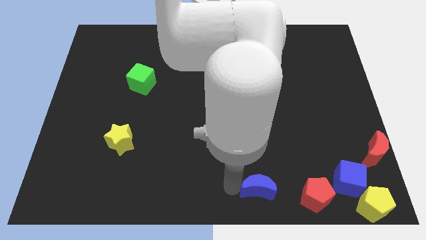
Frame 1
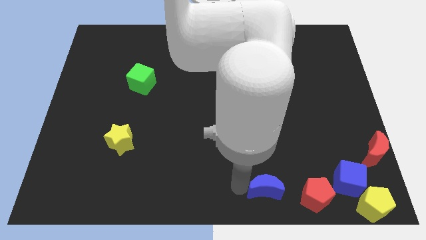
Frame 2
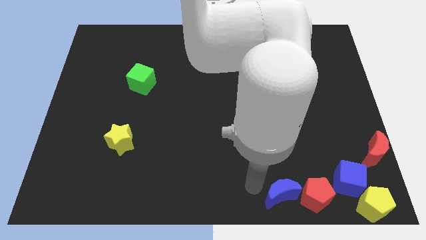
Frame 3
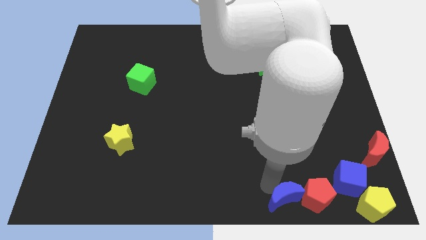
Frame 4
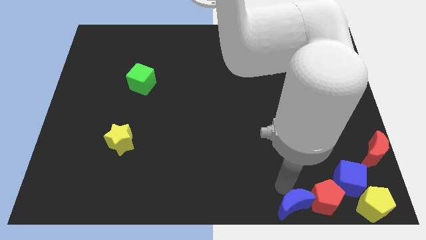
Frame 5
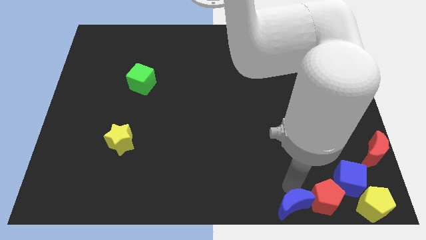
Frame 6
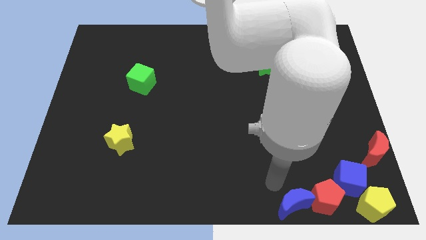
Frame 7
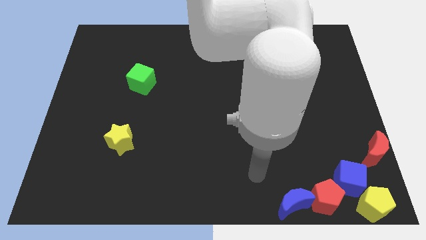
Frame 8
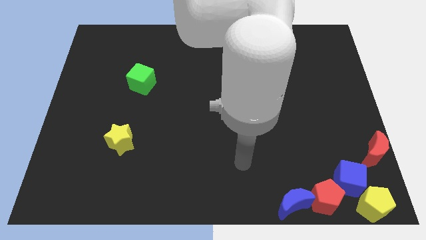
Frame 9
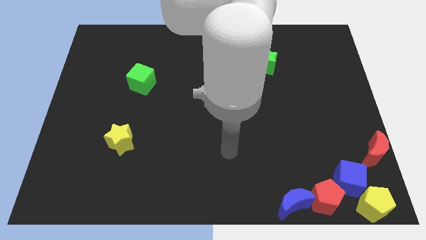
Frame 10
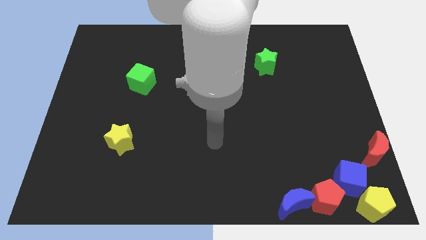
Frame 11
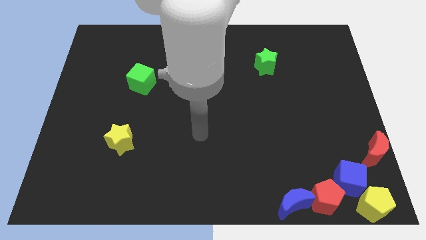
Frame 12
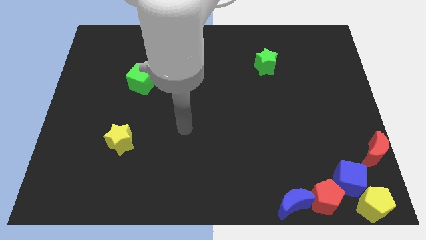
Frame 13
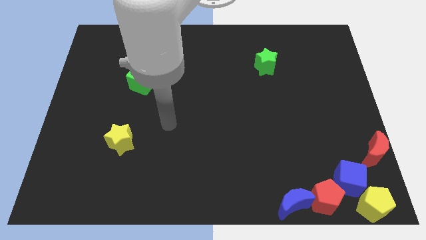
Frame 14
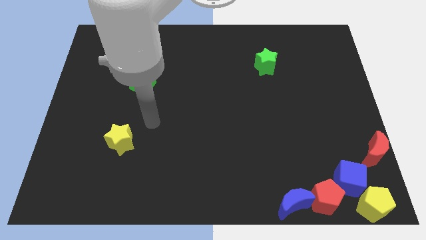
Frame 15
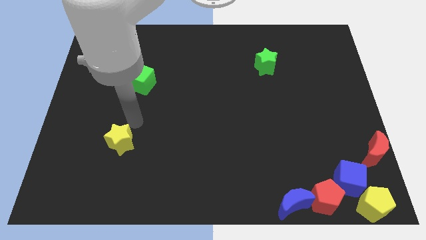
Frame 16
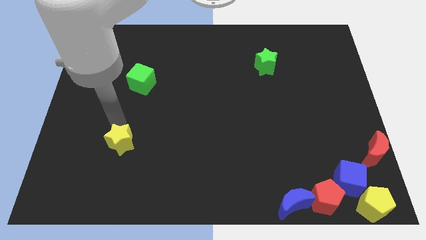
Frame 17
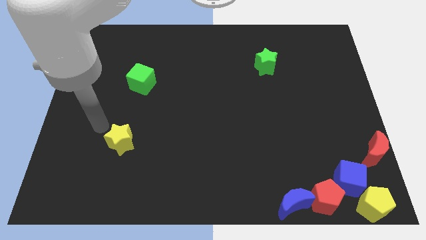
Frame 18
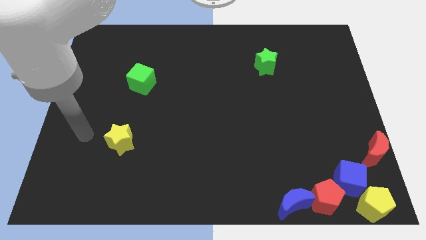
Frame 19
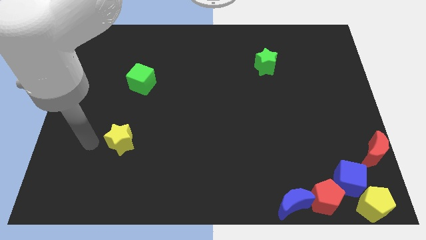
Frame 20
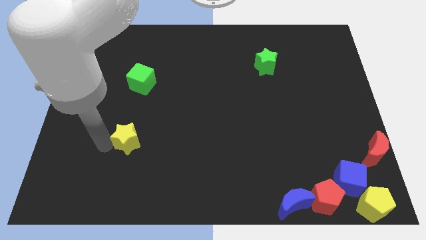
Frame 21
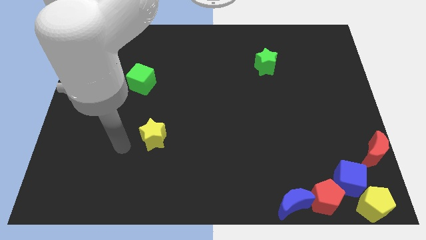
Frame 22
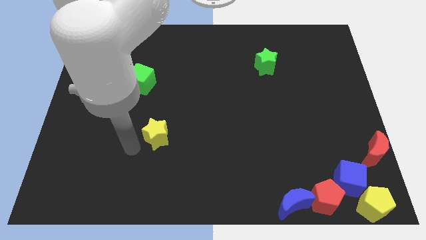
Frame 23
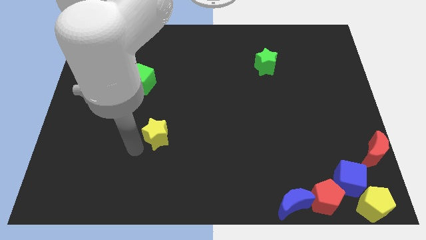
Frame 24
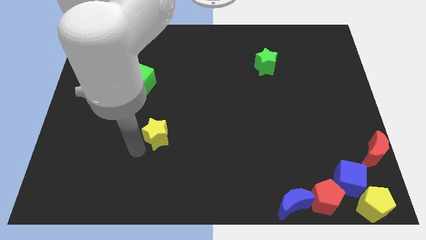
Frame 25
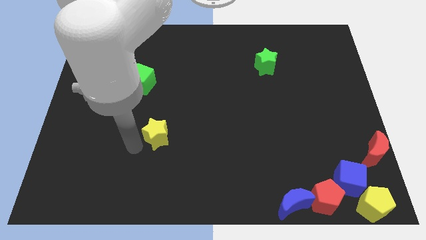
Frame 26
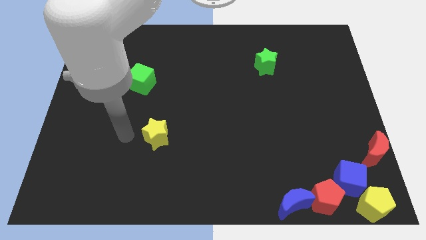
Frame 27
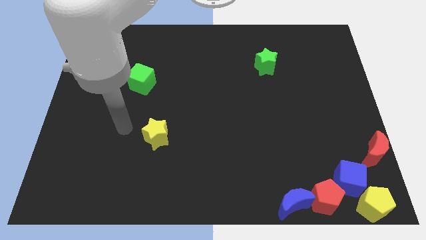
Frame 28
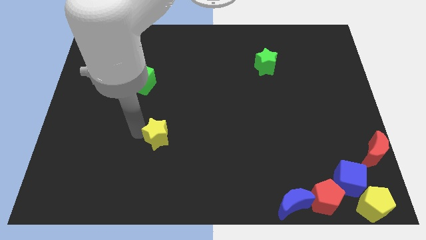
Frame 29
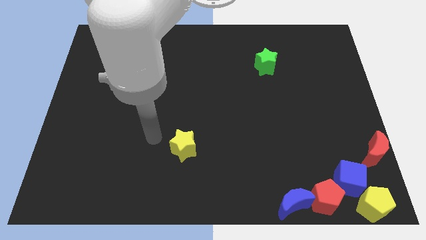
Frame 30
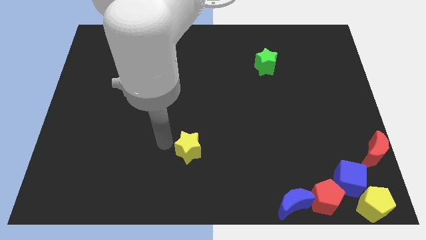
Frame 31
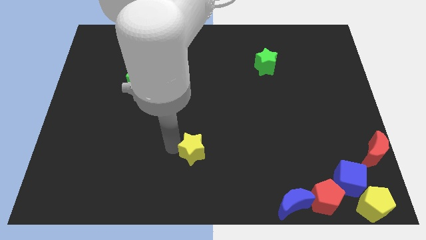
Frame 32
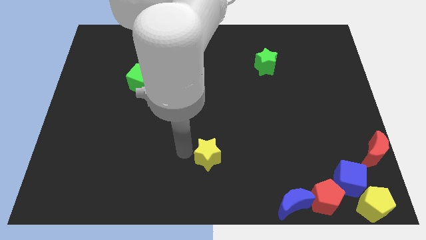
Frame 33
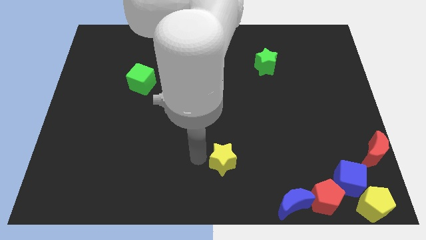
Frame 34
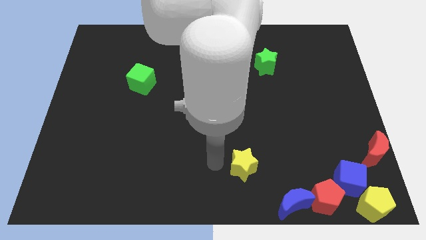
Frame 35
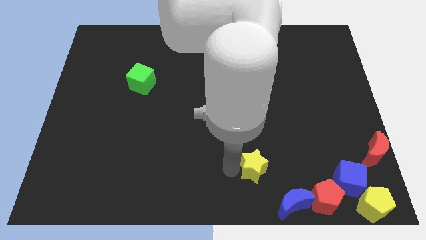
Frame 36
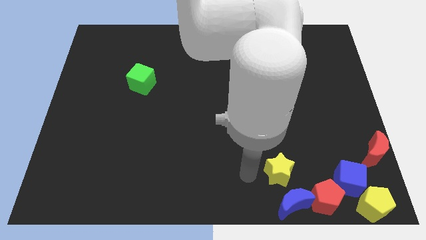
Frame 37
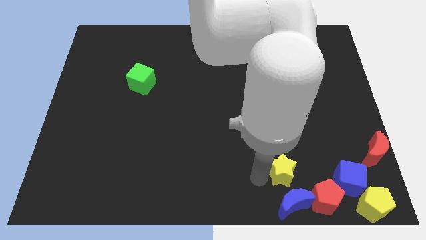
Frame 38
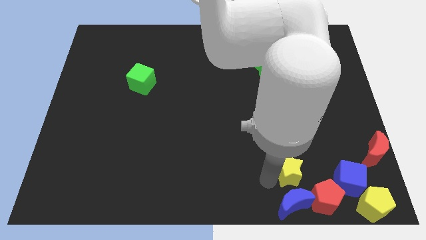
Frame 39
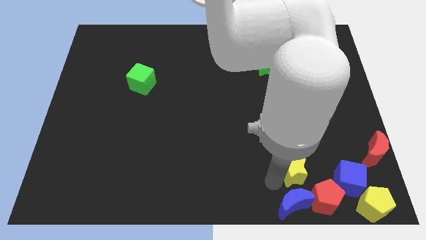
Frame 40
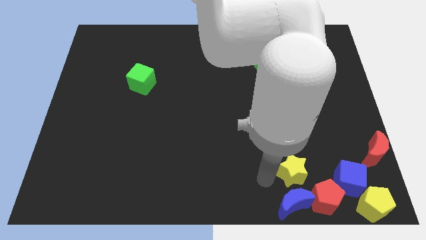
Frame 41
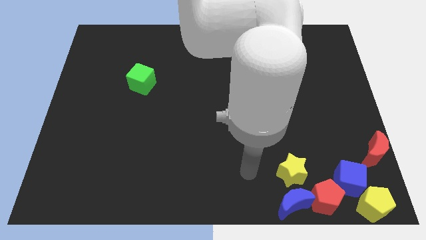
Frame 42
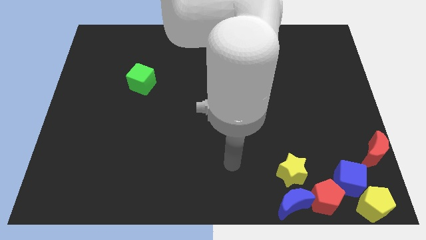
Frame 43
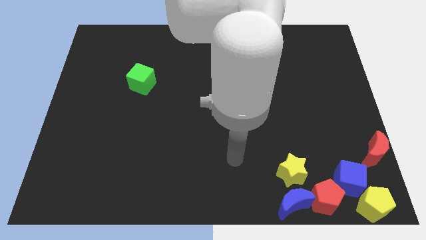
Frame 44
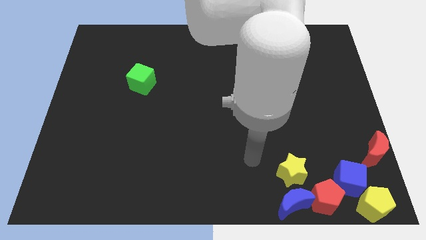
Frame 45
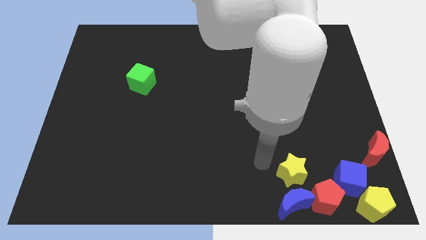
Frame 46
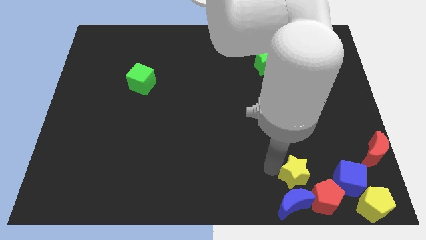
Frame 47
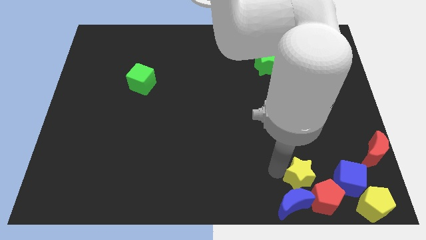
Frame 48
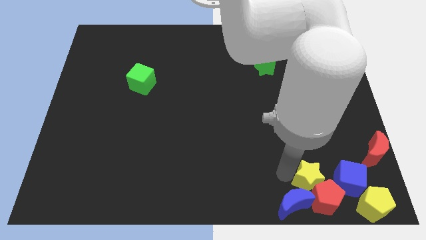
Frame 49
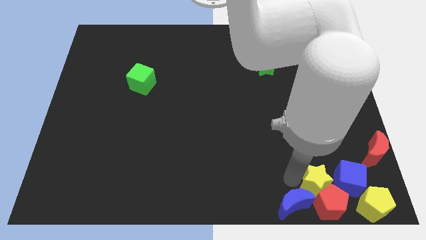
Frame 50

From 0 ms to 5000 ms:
group up the red pentagon blue crescent and yellow star at the bottom left side of the blue cube

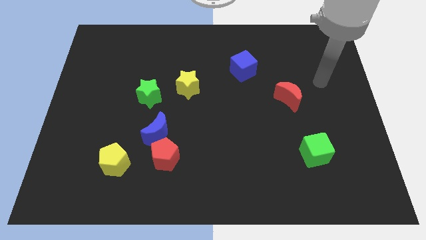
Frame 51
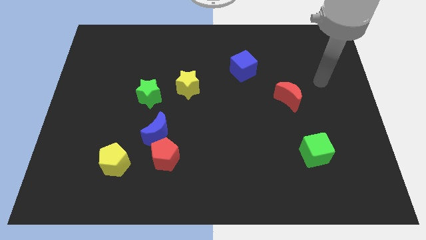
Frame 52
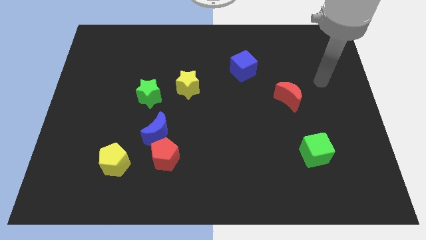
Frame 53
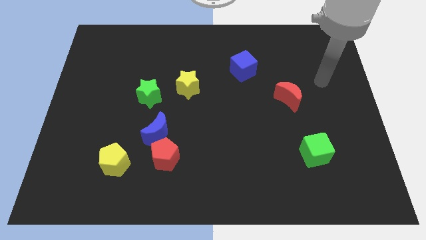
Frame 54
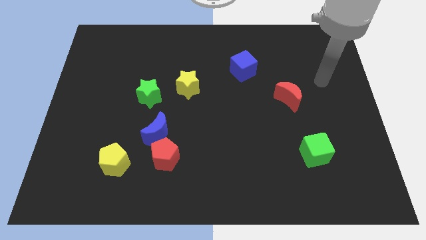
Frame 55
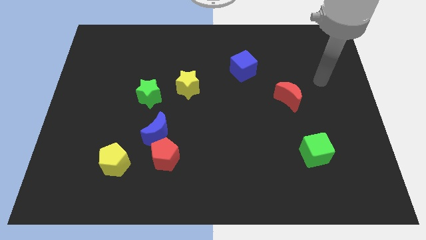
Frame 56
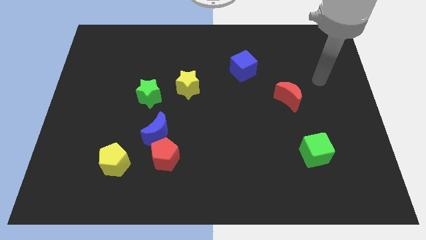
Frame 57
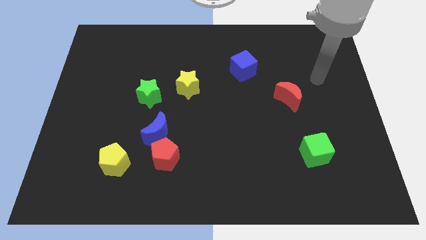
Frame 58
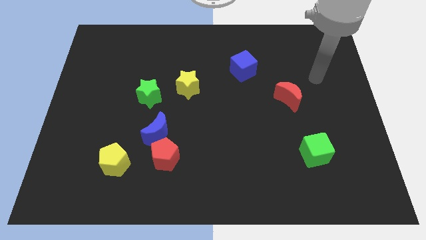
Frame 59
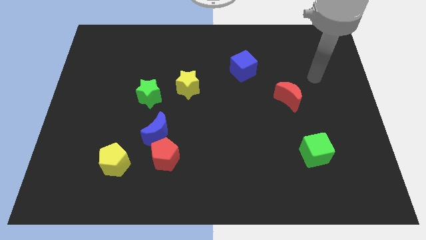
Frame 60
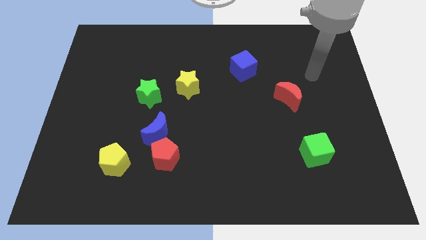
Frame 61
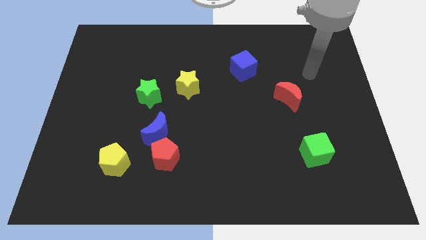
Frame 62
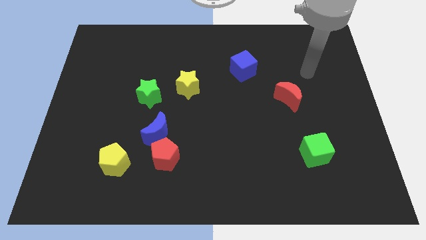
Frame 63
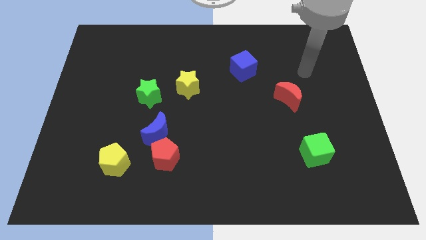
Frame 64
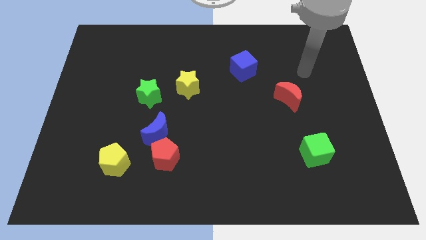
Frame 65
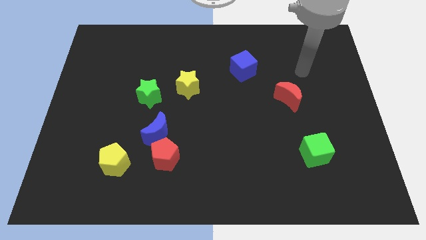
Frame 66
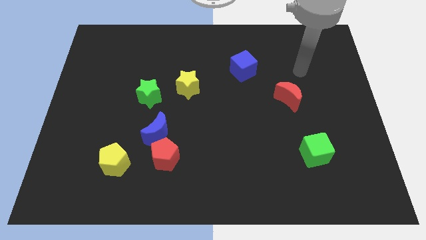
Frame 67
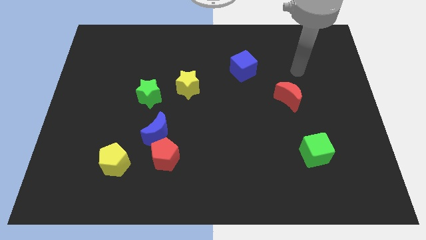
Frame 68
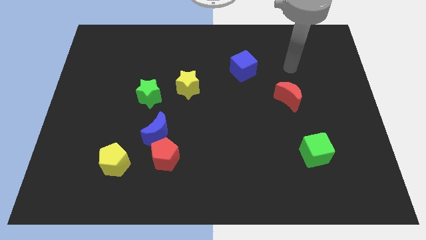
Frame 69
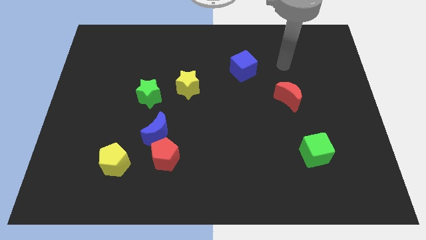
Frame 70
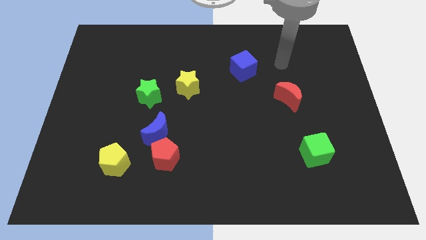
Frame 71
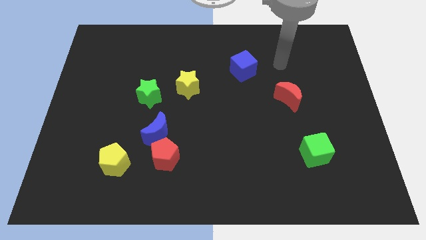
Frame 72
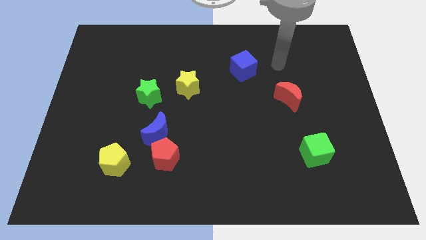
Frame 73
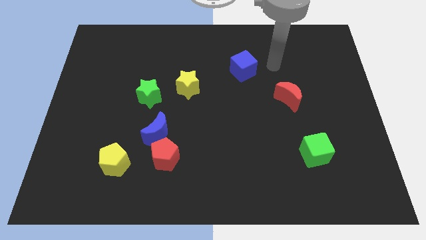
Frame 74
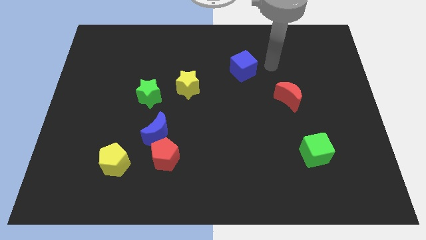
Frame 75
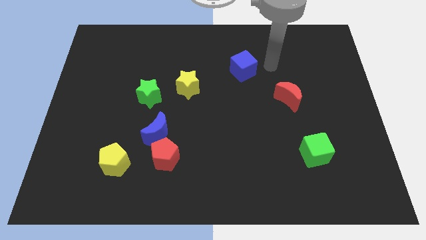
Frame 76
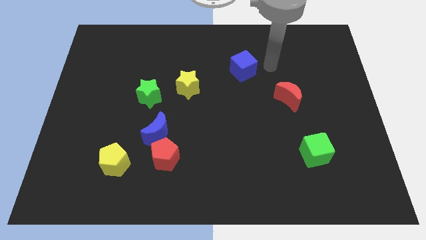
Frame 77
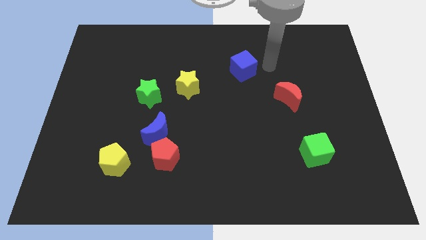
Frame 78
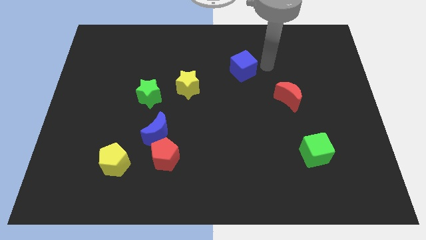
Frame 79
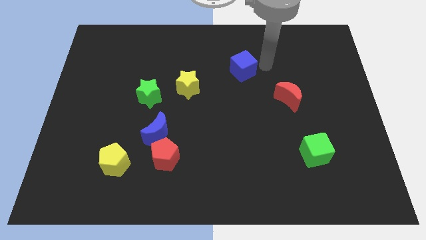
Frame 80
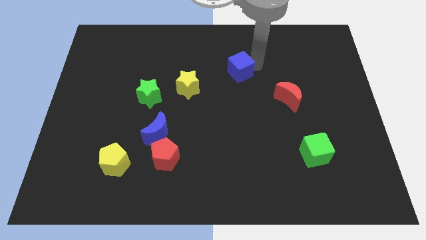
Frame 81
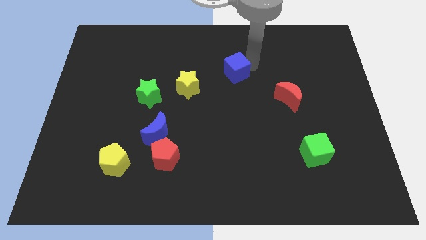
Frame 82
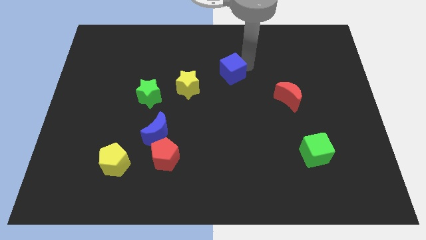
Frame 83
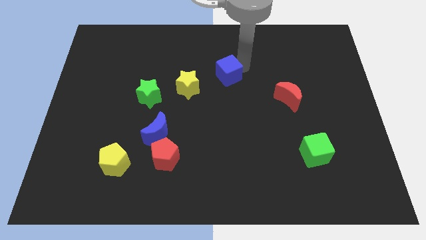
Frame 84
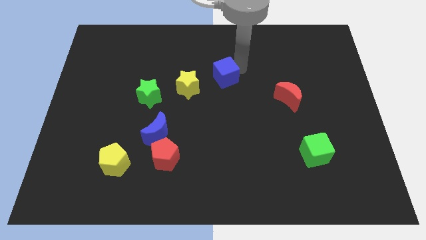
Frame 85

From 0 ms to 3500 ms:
move blue cube to the center

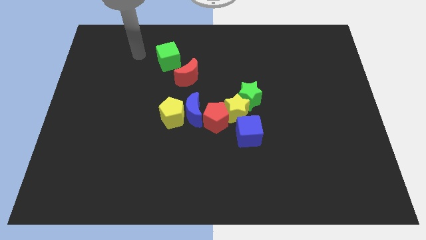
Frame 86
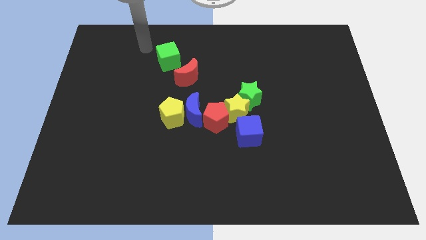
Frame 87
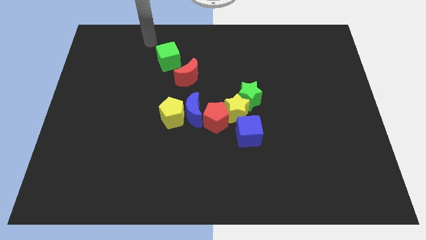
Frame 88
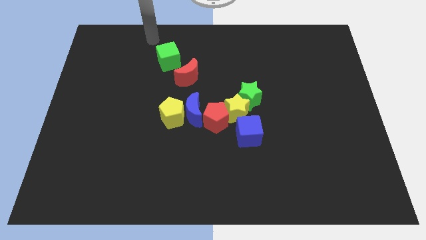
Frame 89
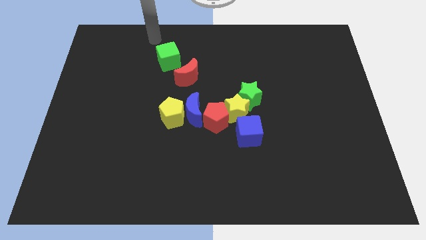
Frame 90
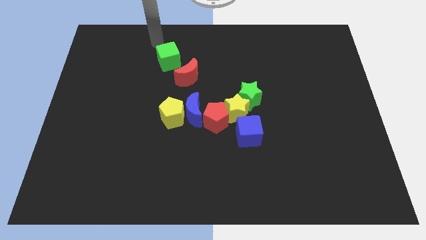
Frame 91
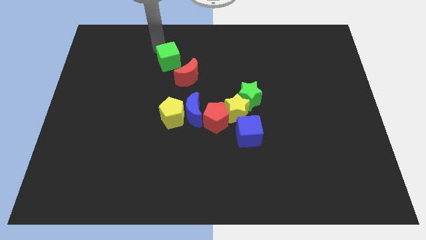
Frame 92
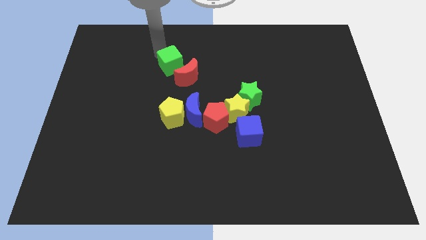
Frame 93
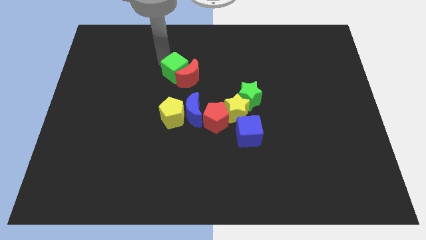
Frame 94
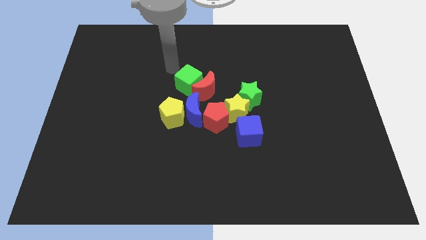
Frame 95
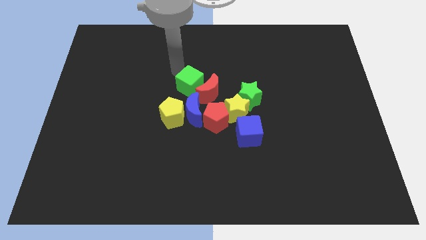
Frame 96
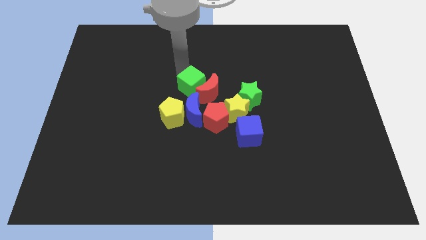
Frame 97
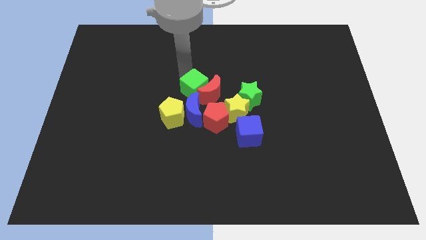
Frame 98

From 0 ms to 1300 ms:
push the green cube into the red crescent from the top
